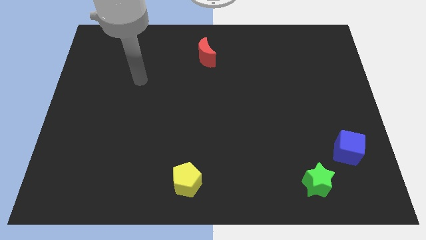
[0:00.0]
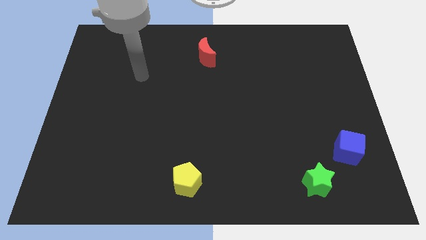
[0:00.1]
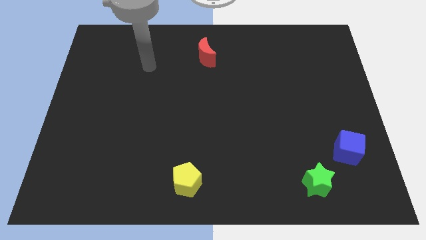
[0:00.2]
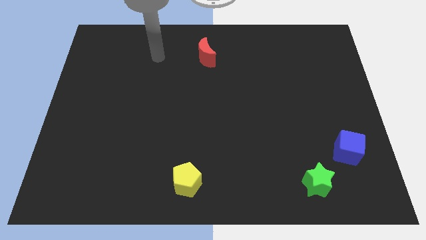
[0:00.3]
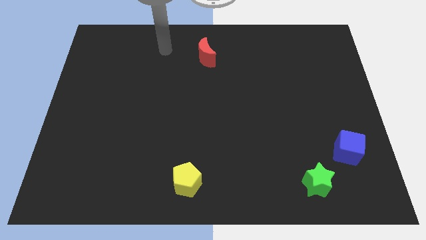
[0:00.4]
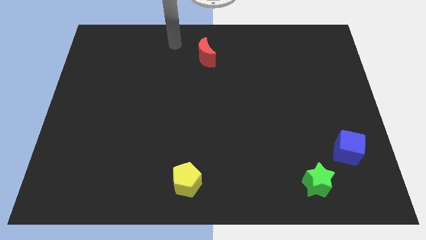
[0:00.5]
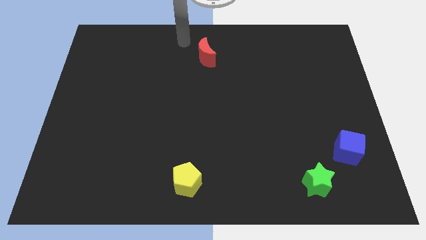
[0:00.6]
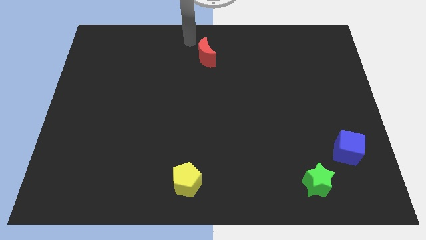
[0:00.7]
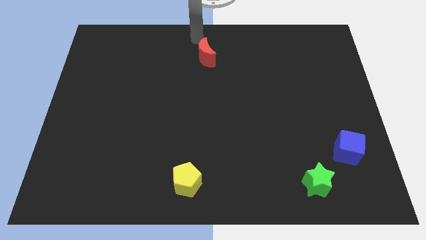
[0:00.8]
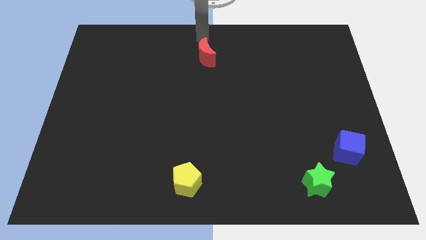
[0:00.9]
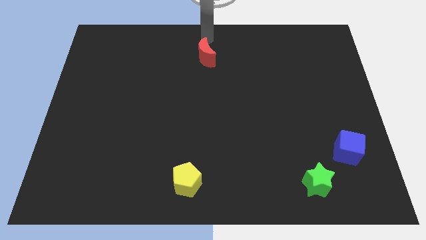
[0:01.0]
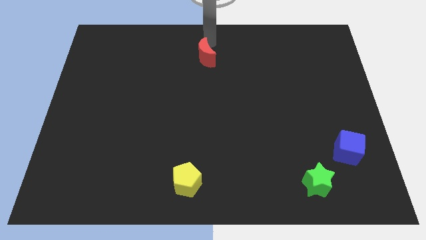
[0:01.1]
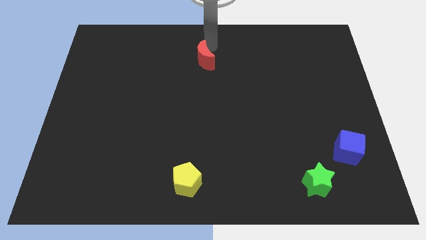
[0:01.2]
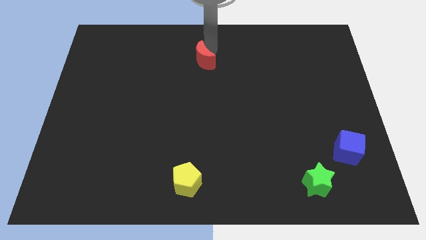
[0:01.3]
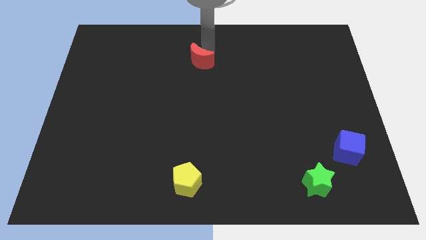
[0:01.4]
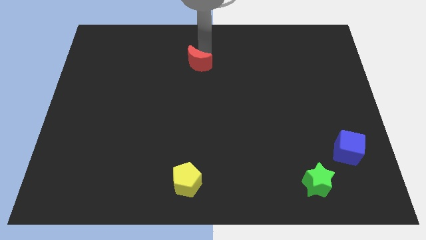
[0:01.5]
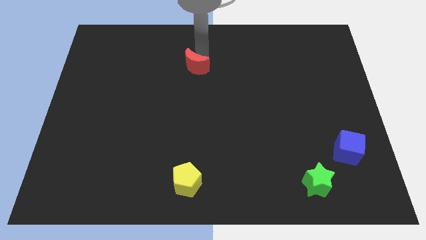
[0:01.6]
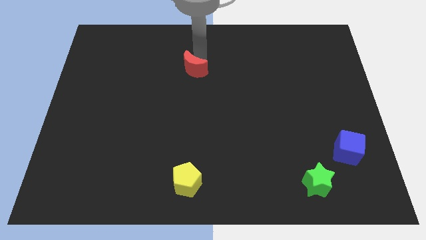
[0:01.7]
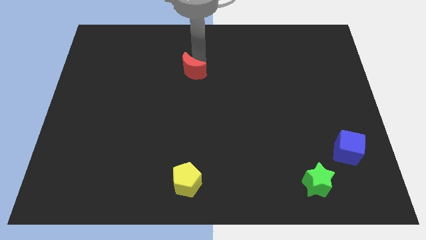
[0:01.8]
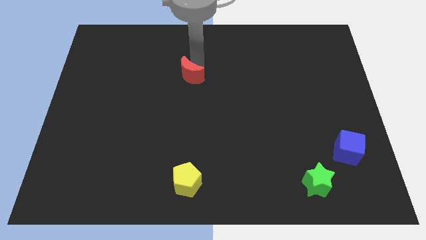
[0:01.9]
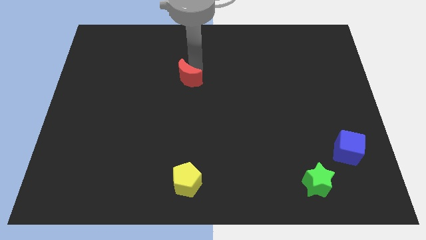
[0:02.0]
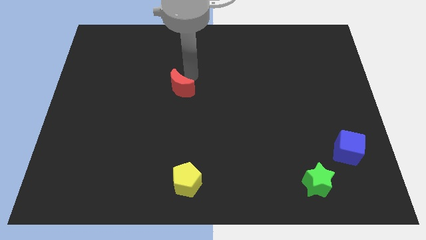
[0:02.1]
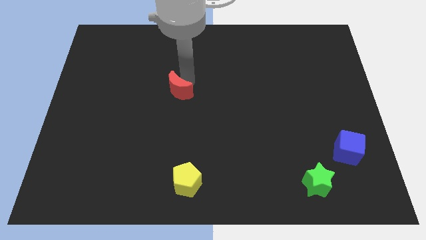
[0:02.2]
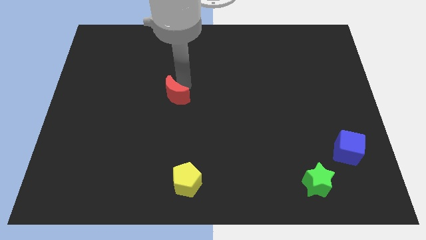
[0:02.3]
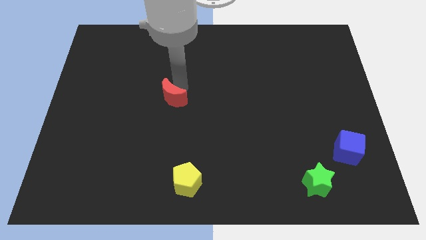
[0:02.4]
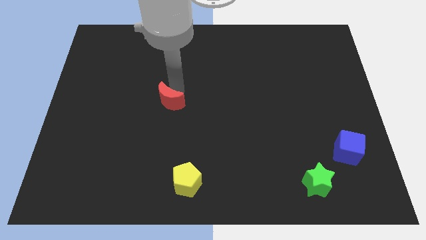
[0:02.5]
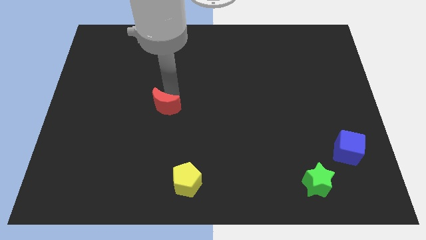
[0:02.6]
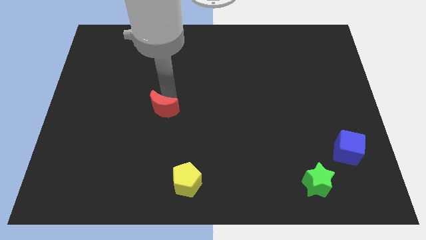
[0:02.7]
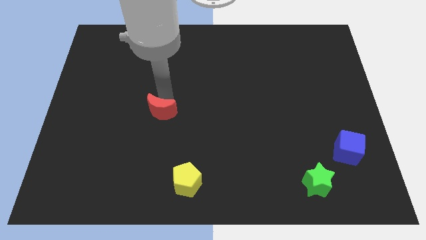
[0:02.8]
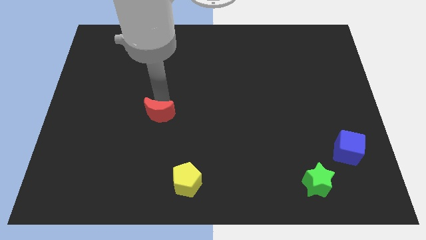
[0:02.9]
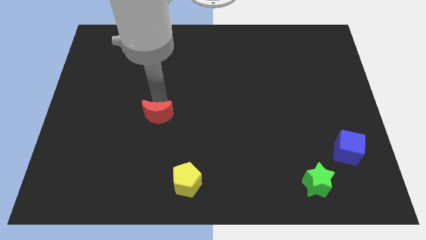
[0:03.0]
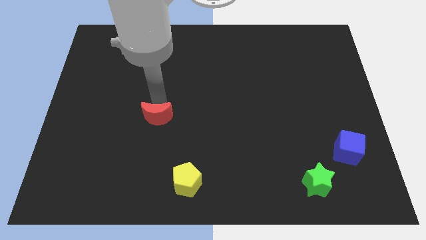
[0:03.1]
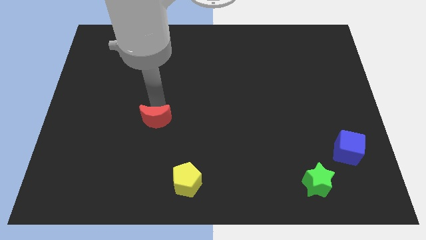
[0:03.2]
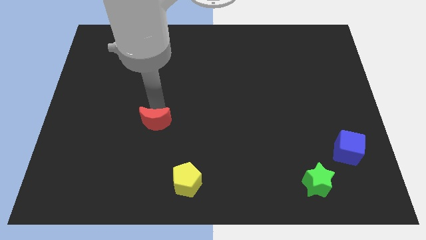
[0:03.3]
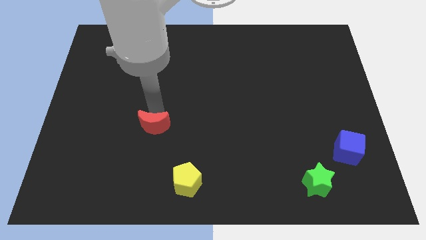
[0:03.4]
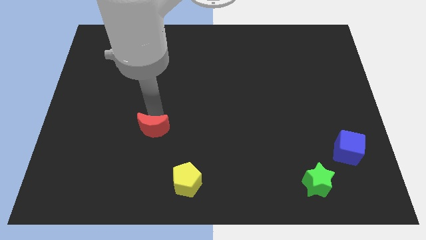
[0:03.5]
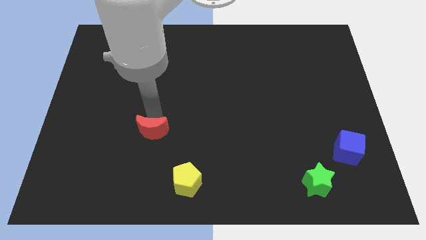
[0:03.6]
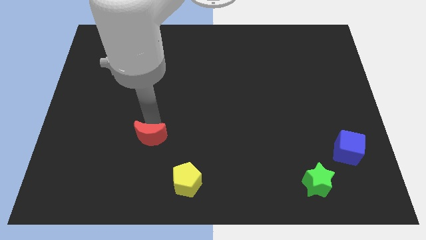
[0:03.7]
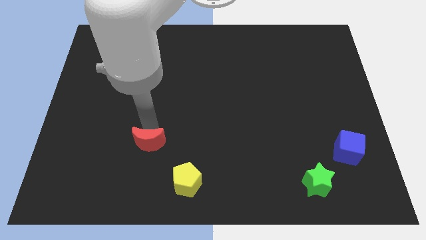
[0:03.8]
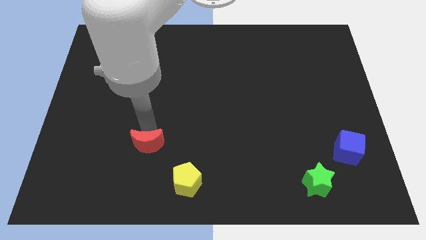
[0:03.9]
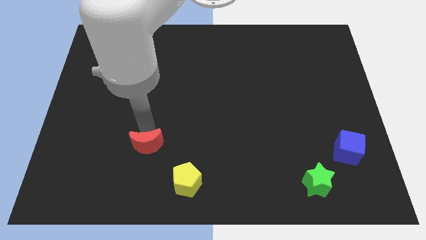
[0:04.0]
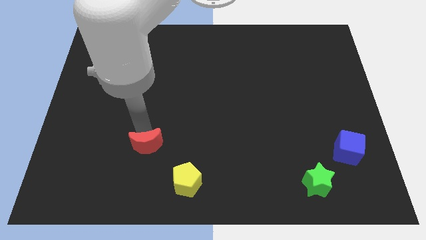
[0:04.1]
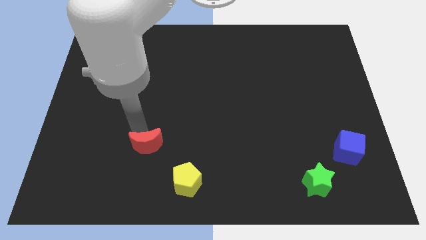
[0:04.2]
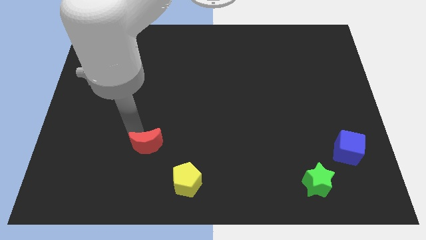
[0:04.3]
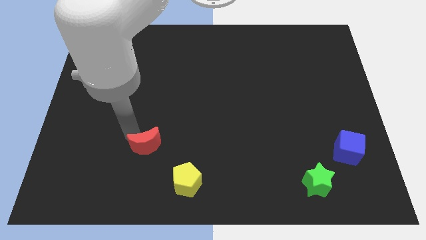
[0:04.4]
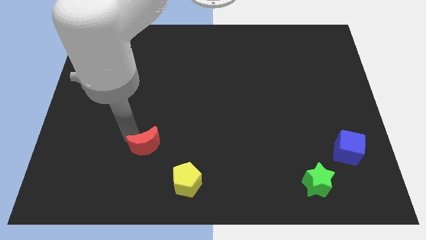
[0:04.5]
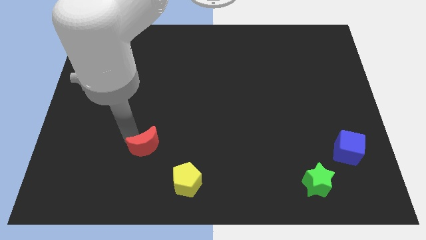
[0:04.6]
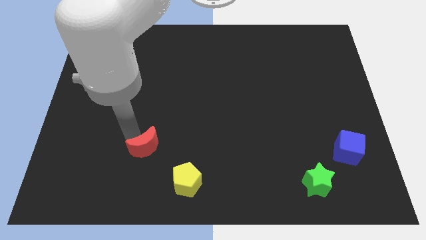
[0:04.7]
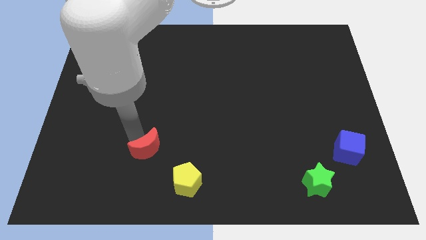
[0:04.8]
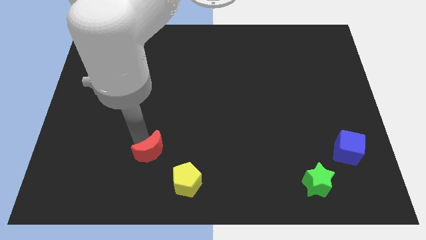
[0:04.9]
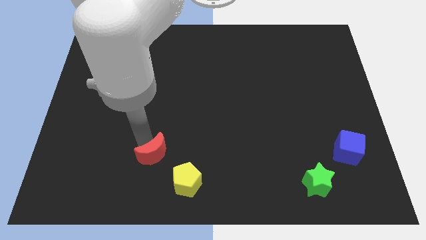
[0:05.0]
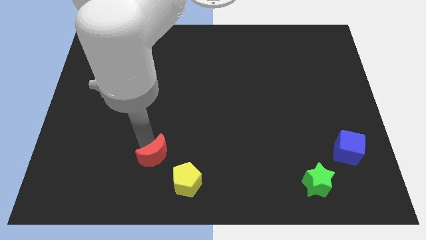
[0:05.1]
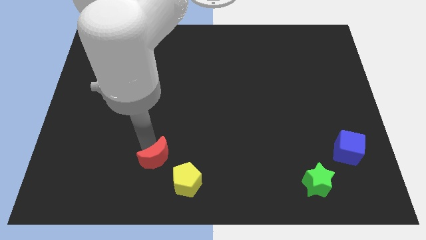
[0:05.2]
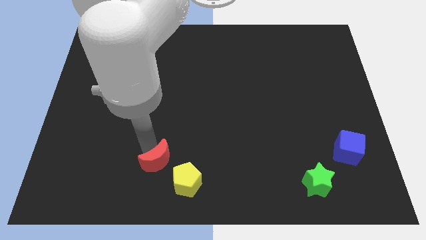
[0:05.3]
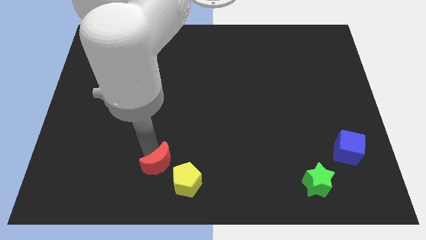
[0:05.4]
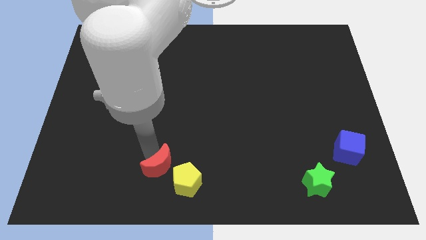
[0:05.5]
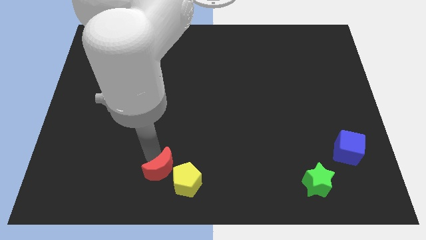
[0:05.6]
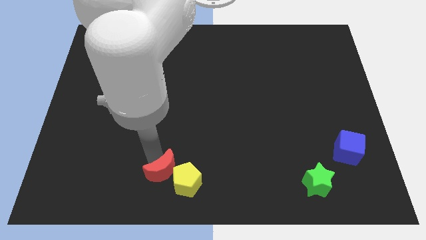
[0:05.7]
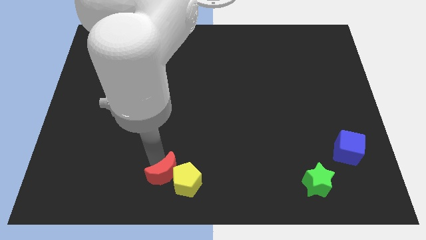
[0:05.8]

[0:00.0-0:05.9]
push the moon close to the yellow pentagon

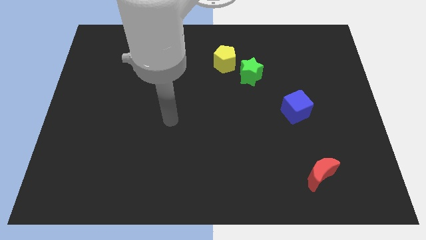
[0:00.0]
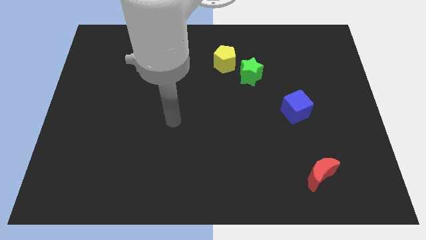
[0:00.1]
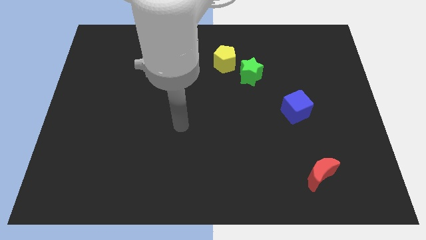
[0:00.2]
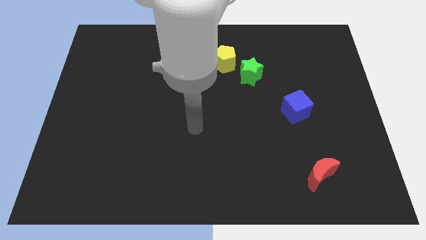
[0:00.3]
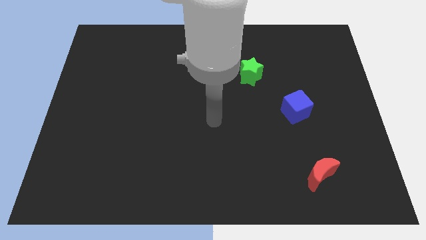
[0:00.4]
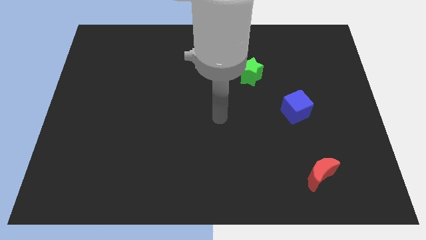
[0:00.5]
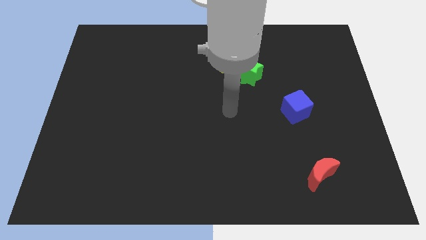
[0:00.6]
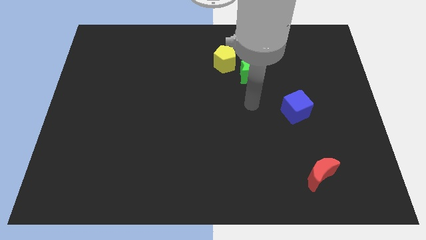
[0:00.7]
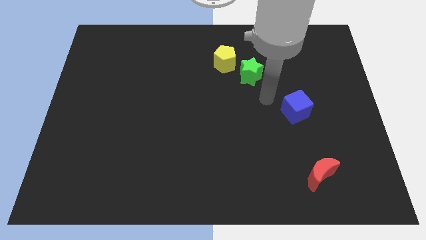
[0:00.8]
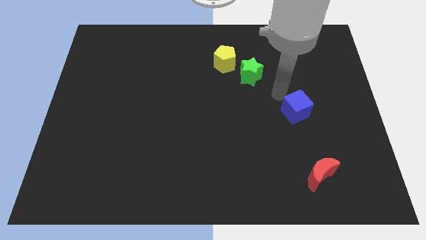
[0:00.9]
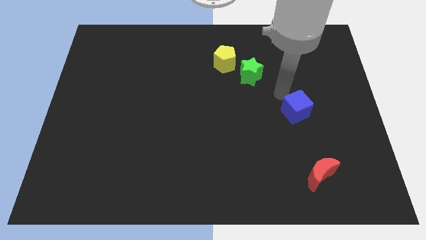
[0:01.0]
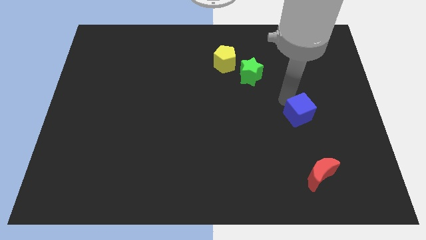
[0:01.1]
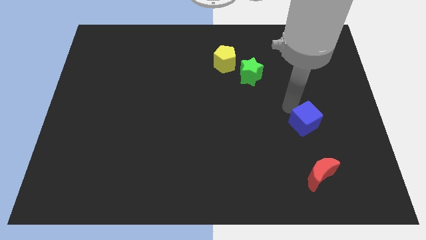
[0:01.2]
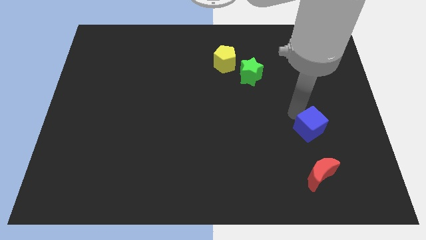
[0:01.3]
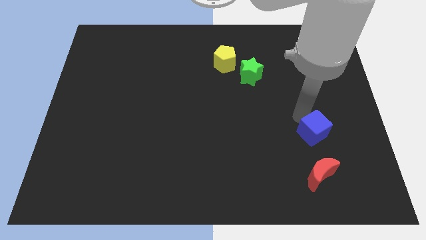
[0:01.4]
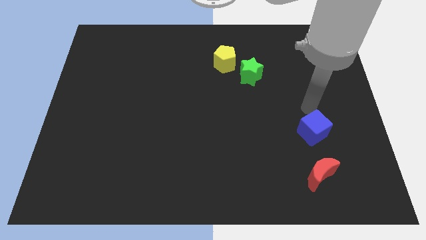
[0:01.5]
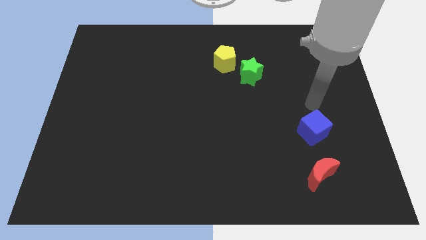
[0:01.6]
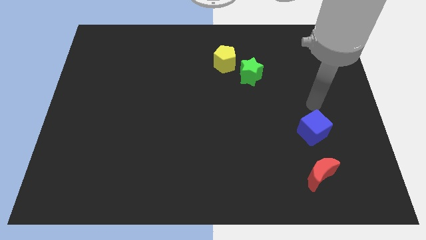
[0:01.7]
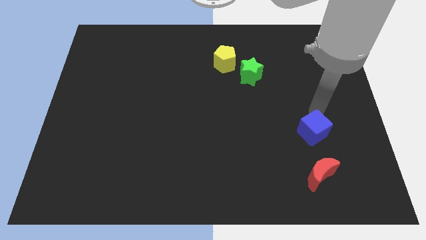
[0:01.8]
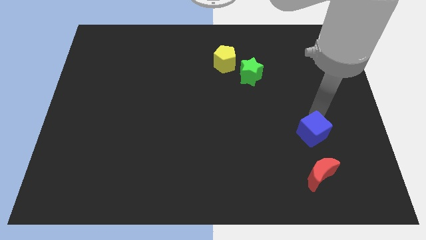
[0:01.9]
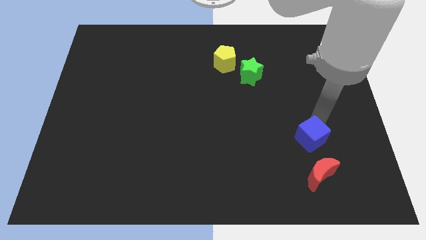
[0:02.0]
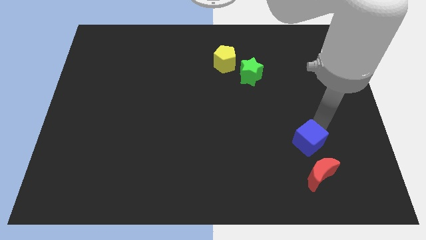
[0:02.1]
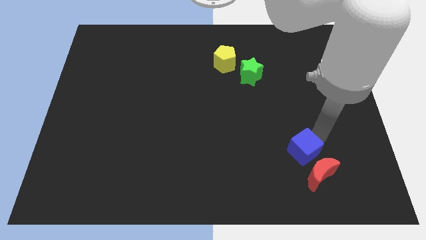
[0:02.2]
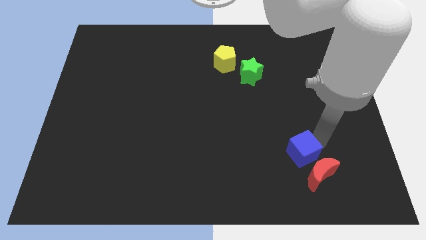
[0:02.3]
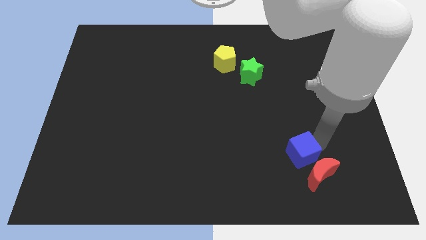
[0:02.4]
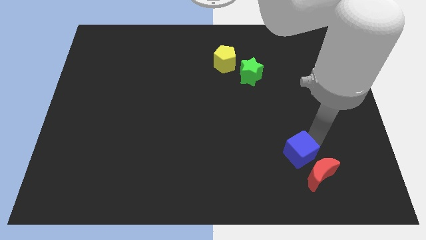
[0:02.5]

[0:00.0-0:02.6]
put the blue cube towards the red block
